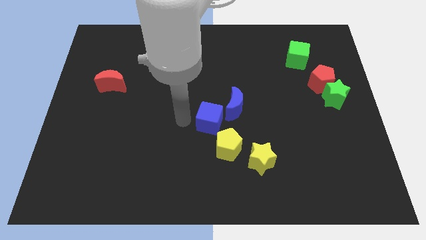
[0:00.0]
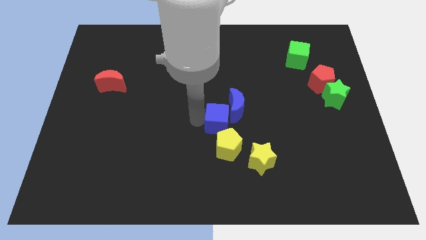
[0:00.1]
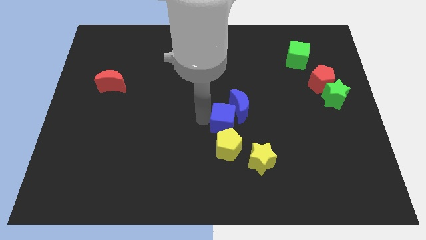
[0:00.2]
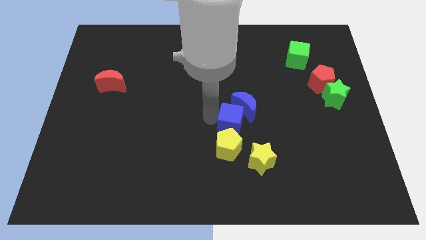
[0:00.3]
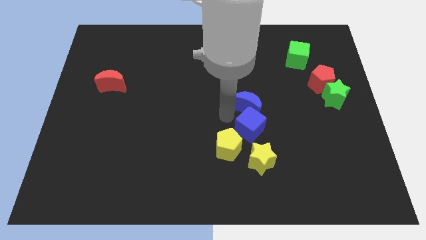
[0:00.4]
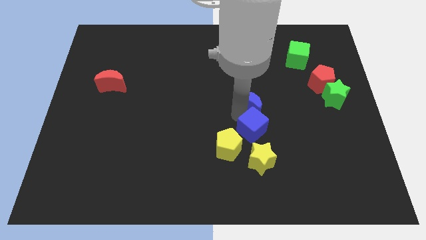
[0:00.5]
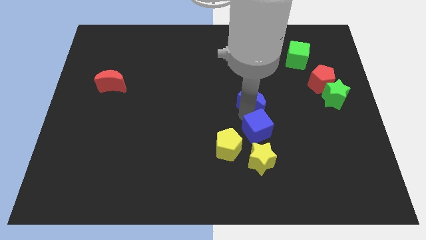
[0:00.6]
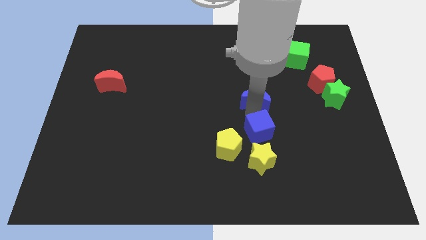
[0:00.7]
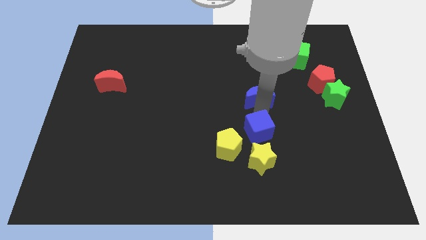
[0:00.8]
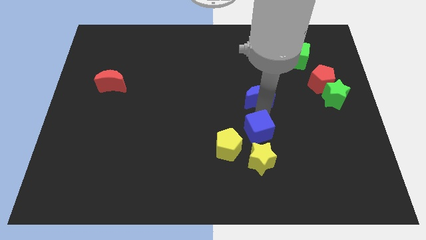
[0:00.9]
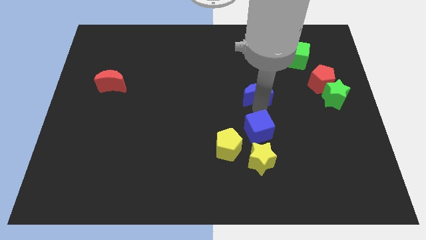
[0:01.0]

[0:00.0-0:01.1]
move blue cube above the yellow star

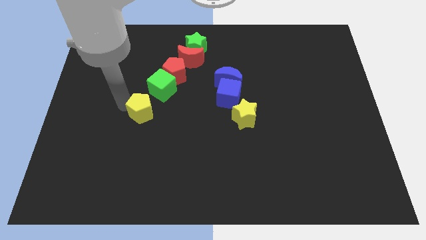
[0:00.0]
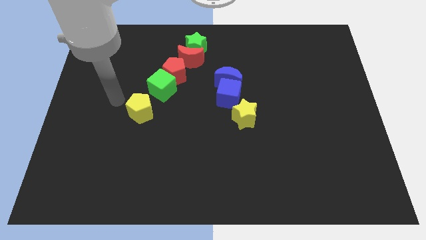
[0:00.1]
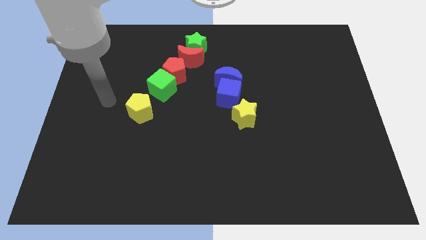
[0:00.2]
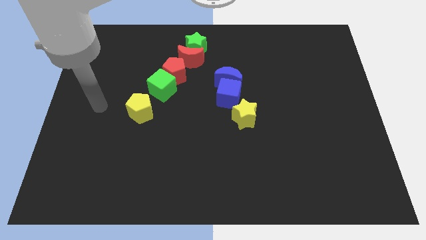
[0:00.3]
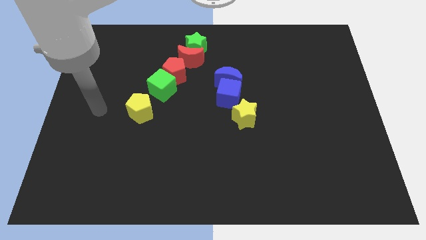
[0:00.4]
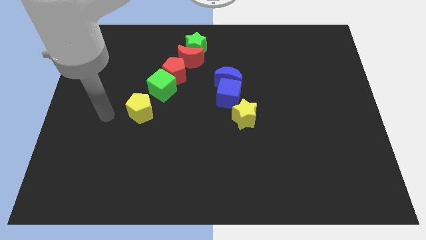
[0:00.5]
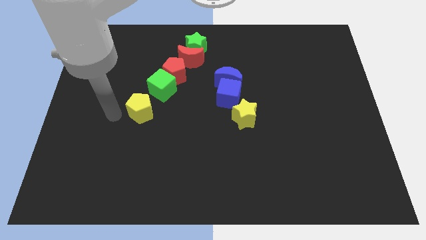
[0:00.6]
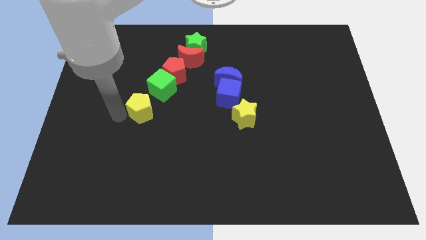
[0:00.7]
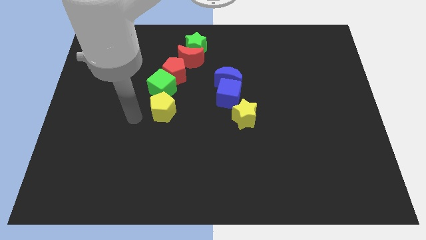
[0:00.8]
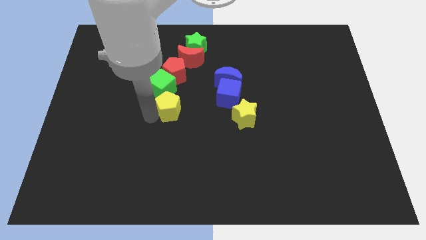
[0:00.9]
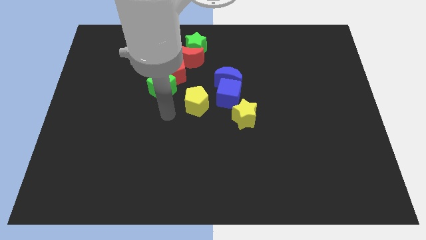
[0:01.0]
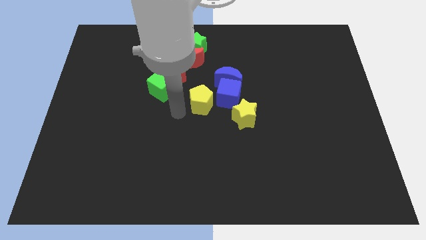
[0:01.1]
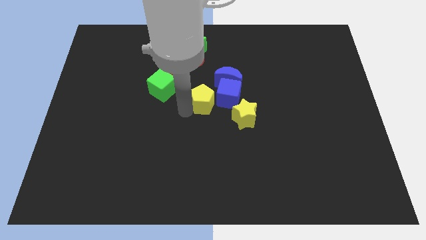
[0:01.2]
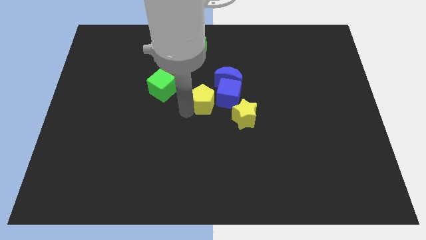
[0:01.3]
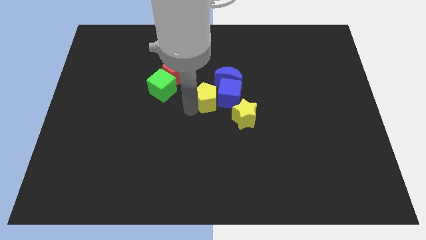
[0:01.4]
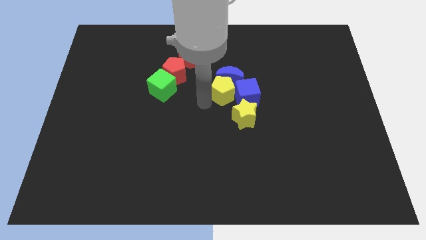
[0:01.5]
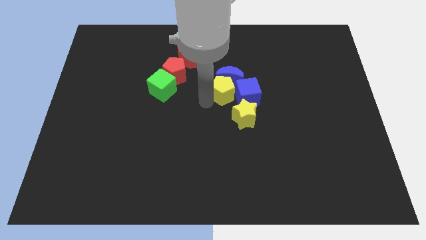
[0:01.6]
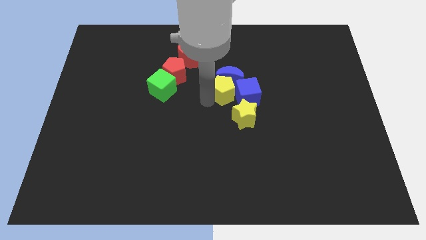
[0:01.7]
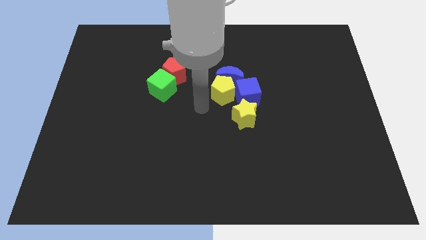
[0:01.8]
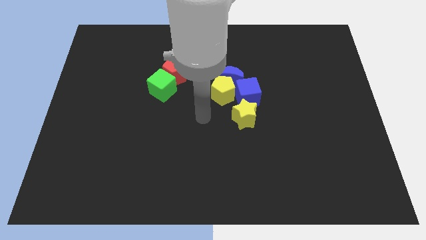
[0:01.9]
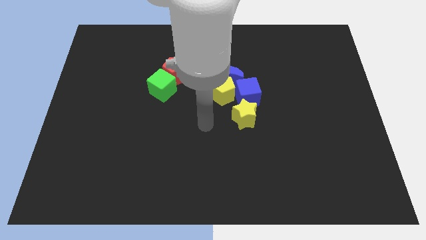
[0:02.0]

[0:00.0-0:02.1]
move the yellow pentagon towards the center of the board

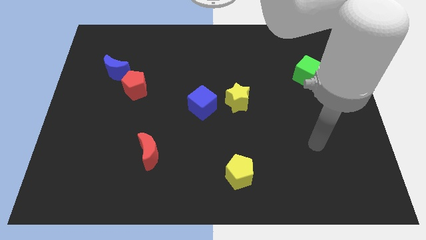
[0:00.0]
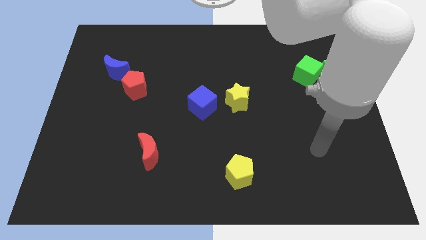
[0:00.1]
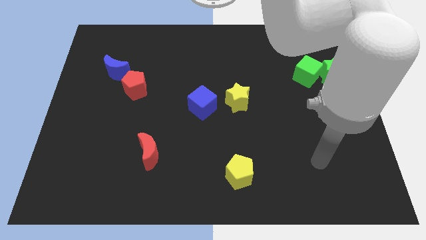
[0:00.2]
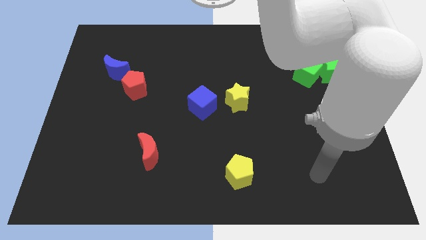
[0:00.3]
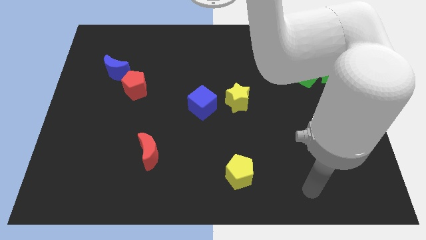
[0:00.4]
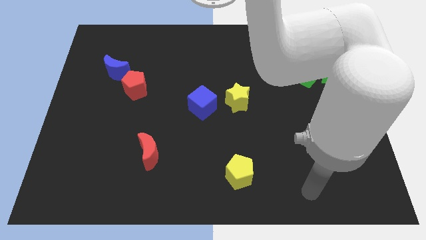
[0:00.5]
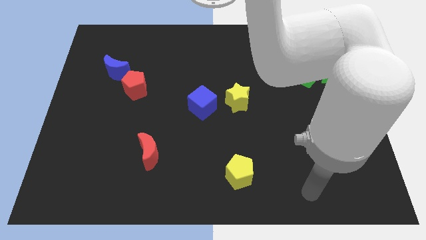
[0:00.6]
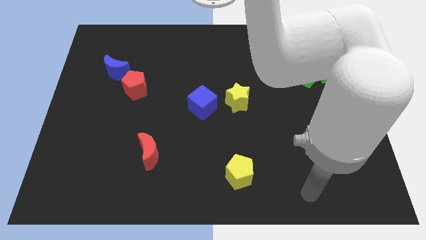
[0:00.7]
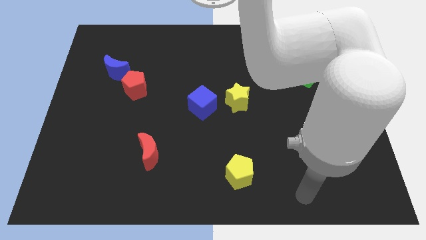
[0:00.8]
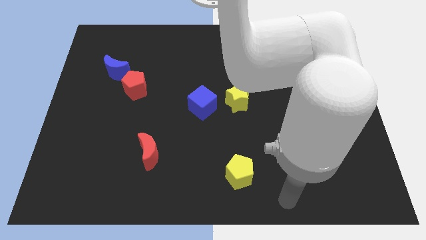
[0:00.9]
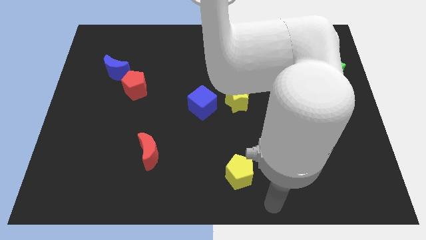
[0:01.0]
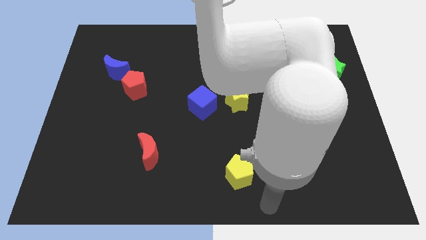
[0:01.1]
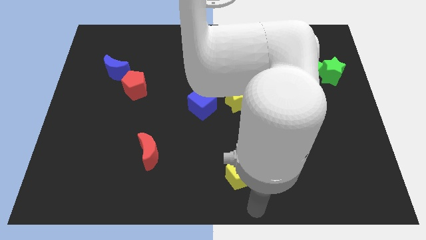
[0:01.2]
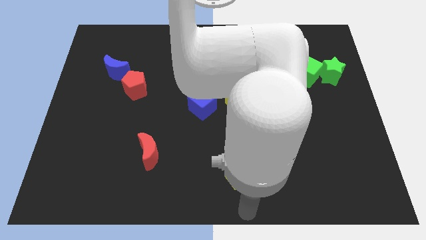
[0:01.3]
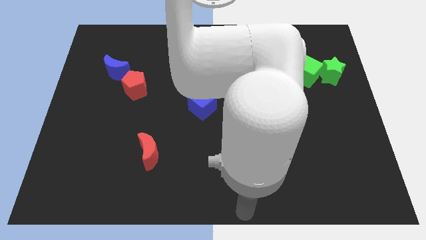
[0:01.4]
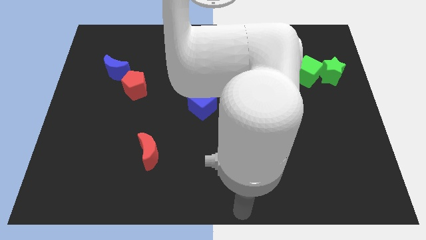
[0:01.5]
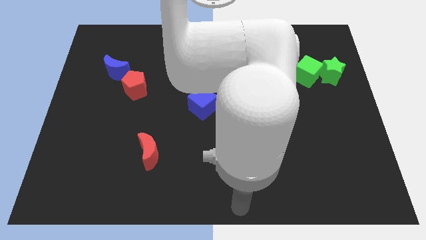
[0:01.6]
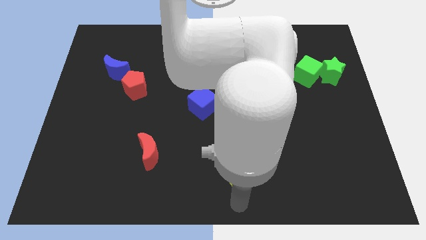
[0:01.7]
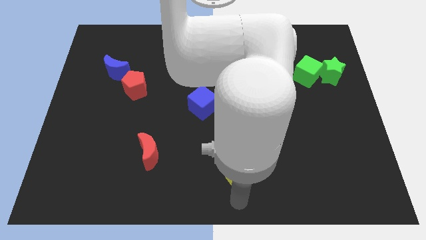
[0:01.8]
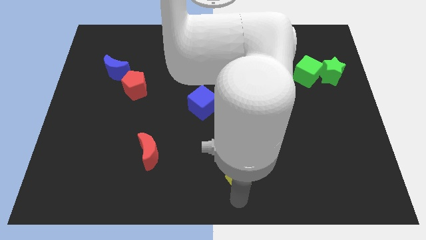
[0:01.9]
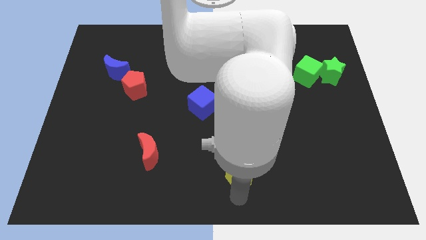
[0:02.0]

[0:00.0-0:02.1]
move your arm to the bottom of the yellow pentagon

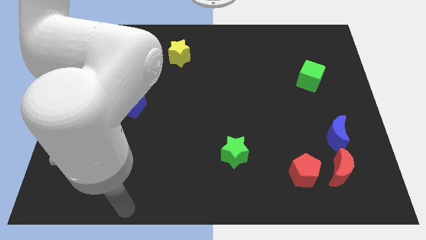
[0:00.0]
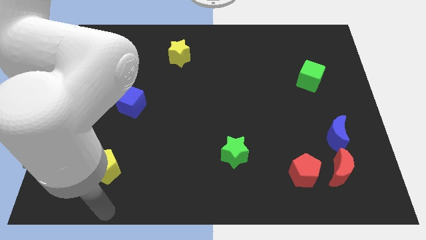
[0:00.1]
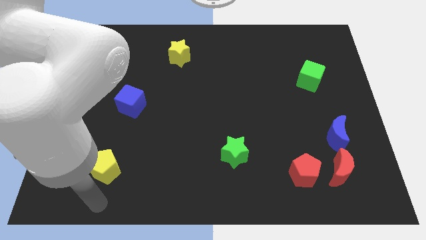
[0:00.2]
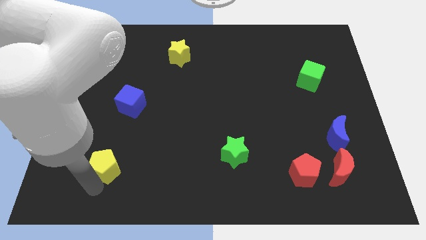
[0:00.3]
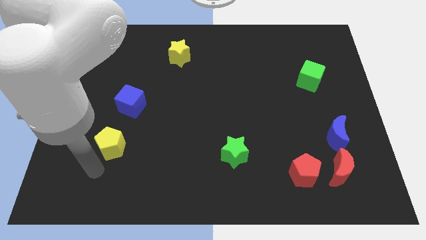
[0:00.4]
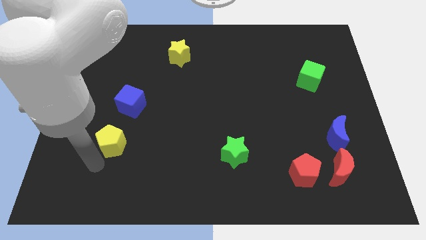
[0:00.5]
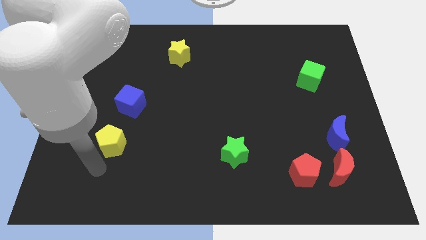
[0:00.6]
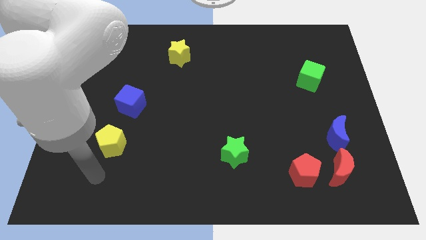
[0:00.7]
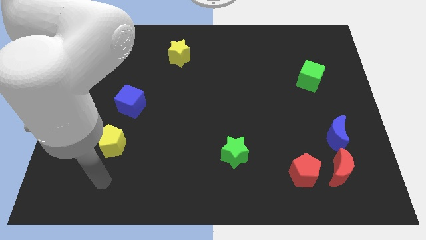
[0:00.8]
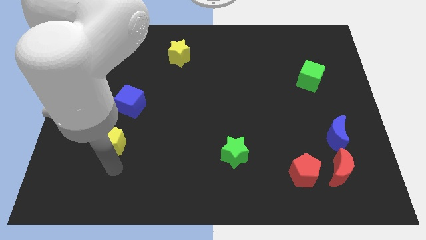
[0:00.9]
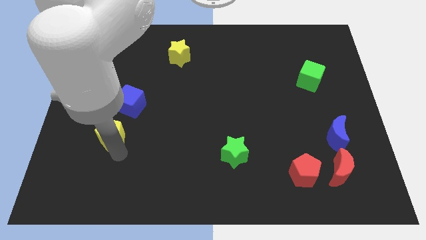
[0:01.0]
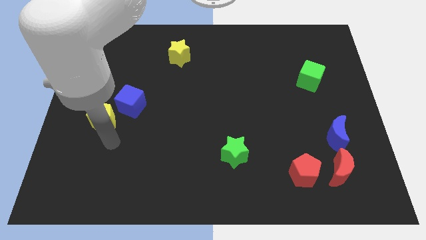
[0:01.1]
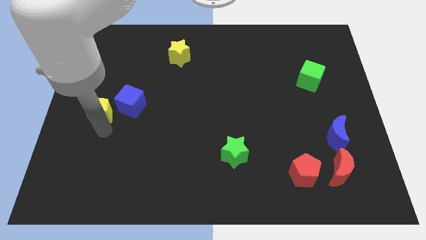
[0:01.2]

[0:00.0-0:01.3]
move yellow pentagon to the left bottom of the blue cube

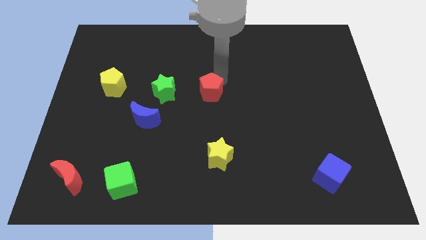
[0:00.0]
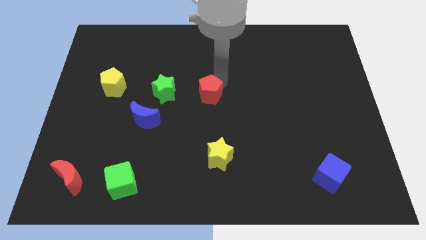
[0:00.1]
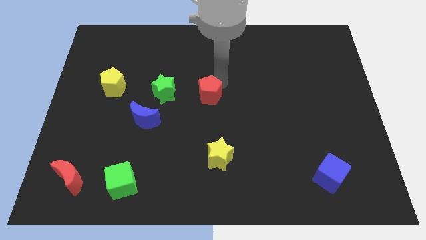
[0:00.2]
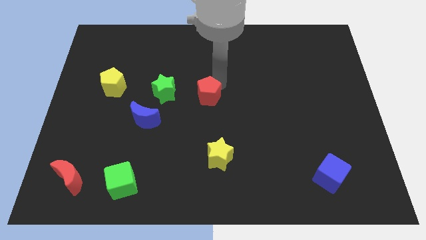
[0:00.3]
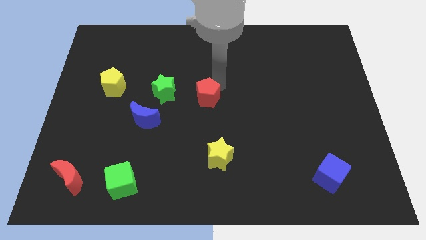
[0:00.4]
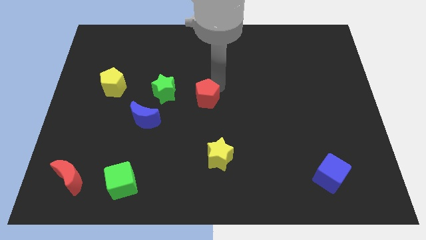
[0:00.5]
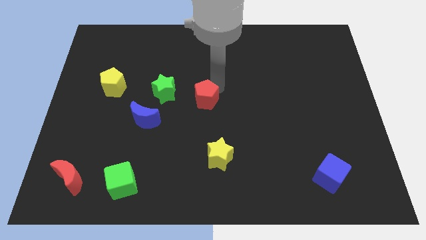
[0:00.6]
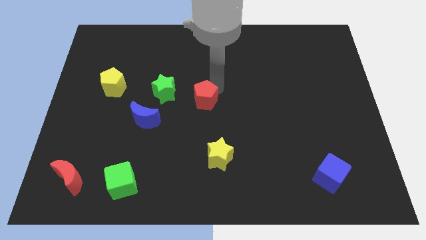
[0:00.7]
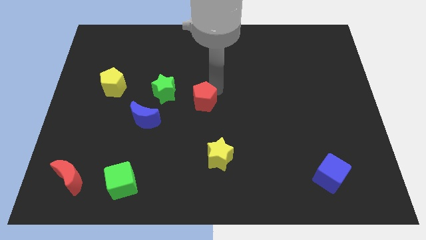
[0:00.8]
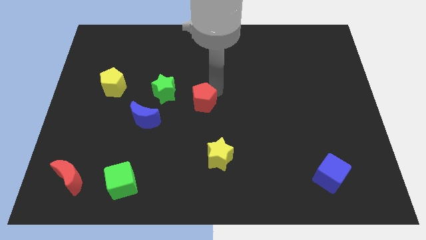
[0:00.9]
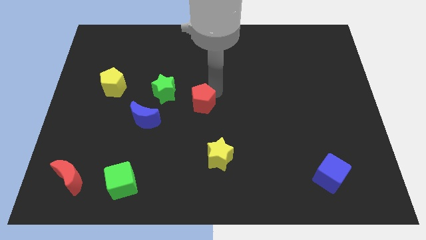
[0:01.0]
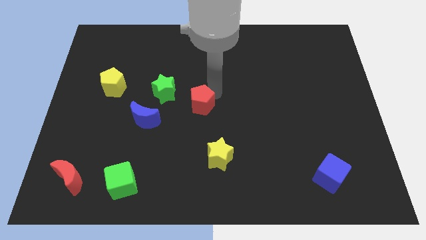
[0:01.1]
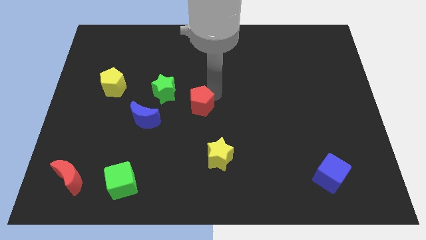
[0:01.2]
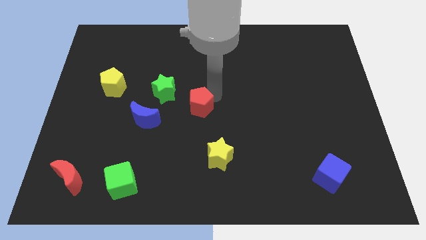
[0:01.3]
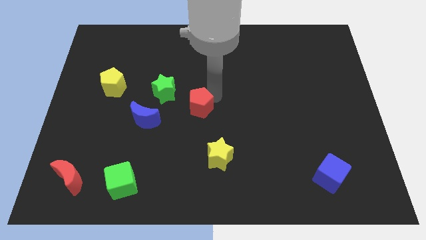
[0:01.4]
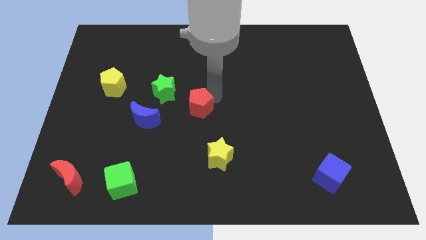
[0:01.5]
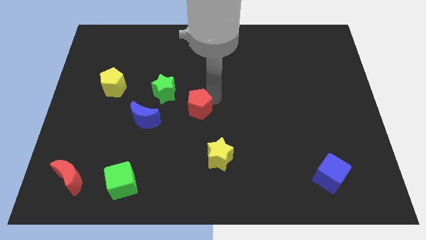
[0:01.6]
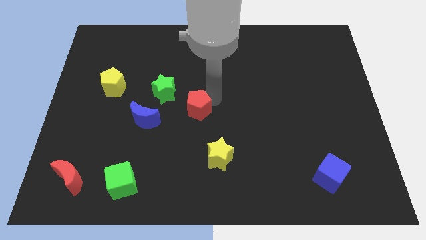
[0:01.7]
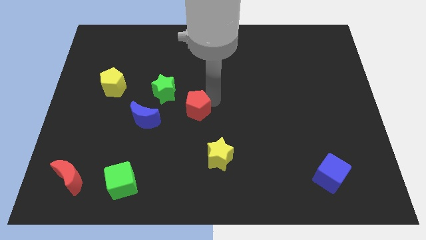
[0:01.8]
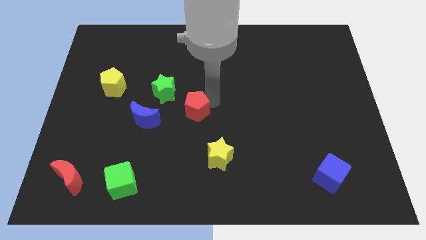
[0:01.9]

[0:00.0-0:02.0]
drag the red pentagon diagonally bottom right to the green star

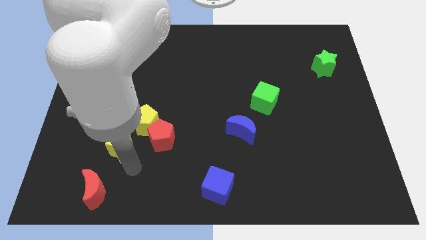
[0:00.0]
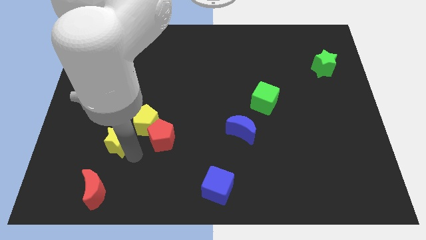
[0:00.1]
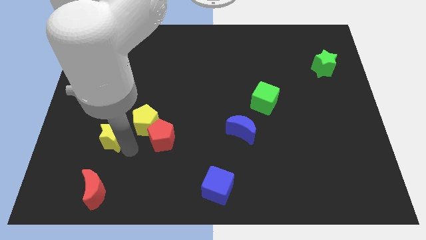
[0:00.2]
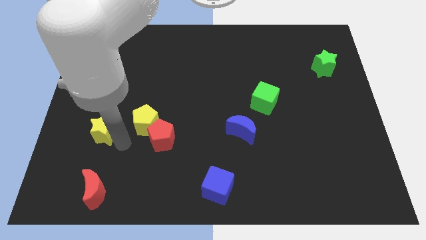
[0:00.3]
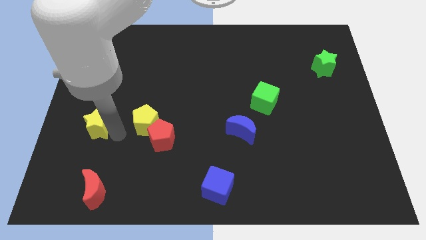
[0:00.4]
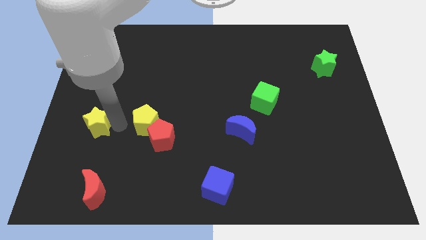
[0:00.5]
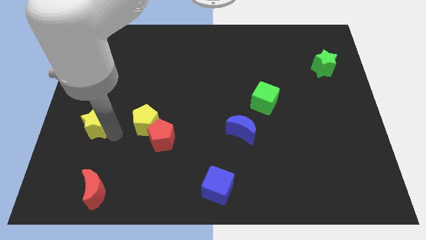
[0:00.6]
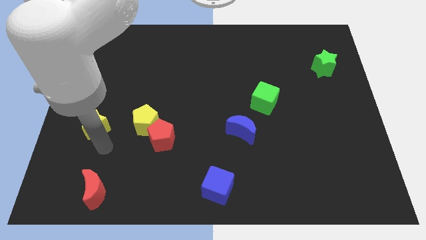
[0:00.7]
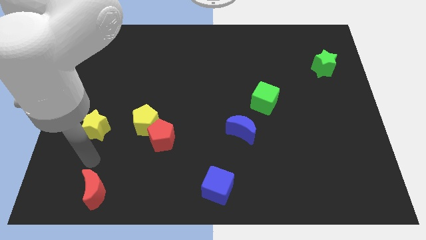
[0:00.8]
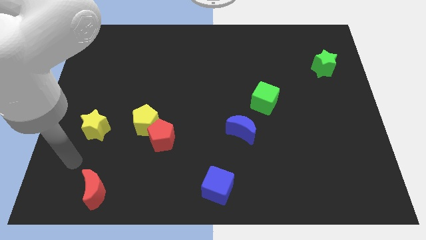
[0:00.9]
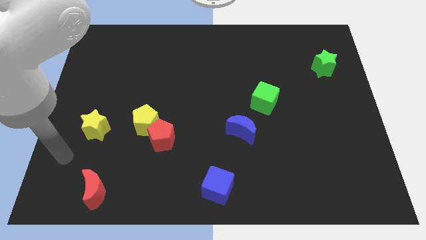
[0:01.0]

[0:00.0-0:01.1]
place the yellow star left to the yellow pentagon
